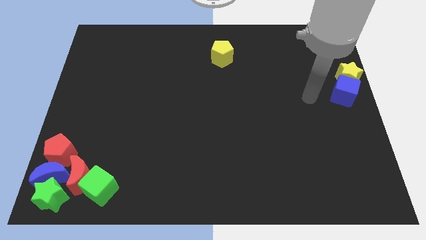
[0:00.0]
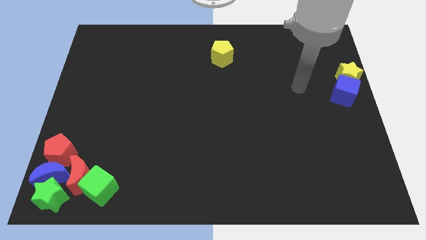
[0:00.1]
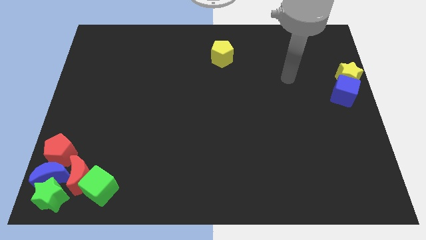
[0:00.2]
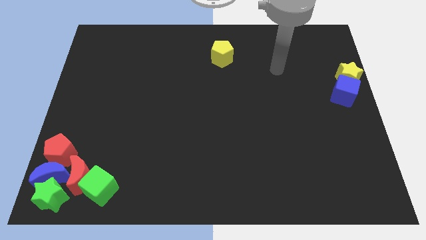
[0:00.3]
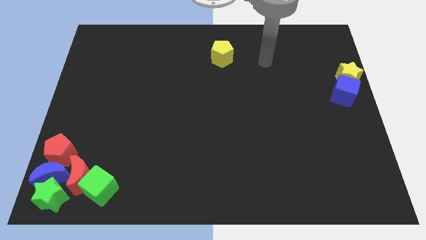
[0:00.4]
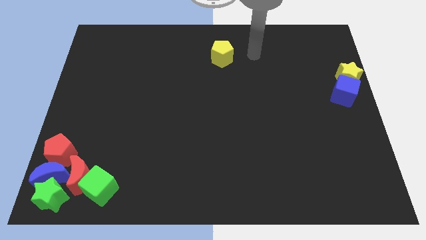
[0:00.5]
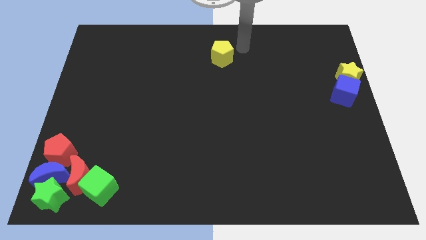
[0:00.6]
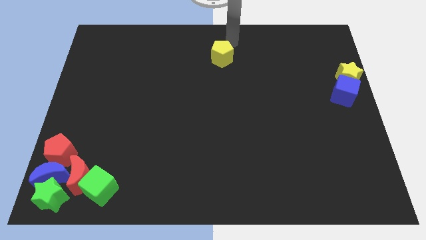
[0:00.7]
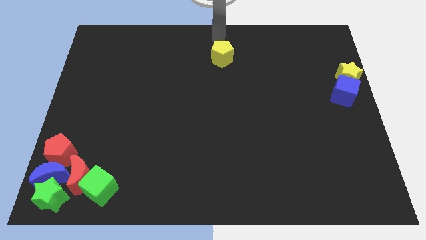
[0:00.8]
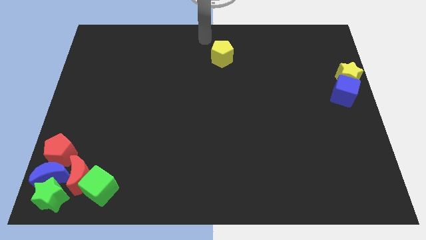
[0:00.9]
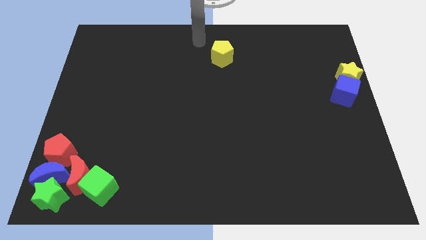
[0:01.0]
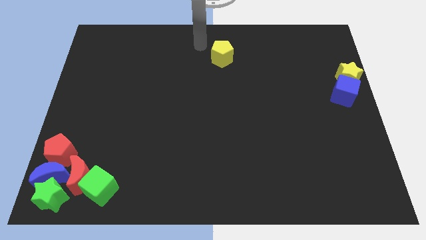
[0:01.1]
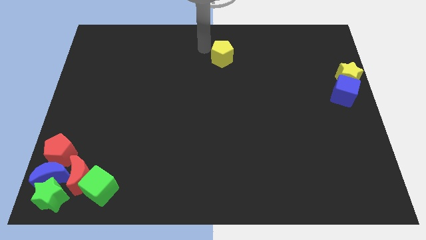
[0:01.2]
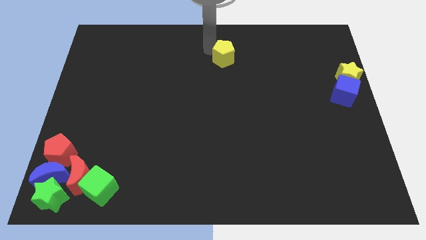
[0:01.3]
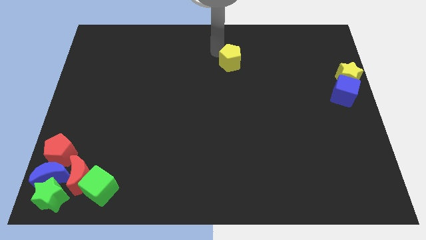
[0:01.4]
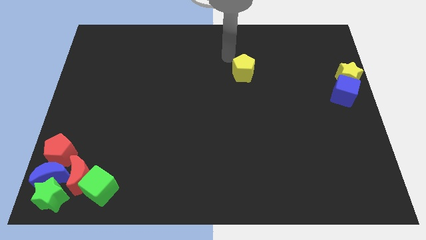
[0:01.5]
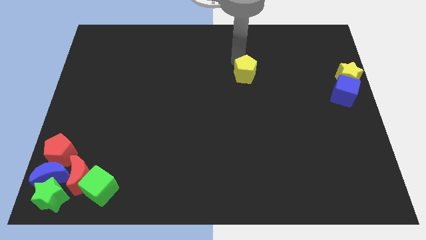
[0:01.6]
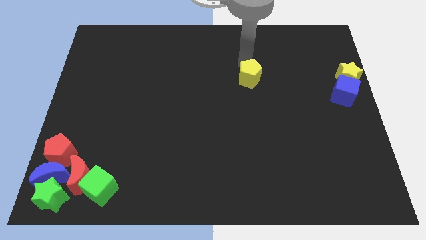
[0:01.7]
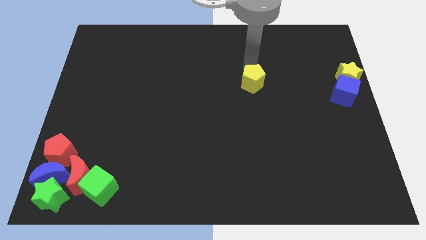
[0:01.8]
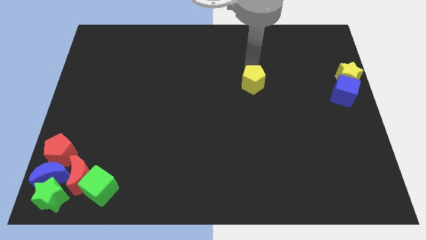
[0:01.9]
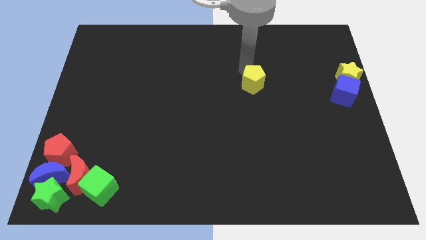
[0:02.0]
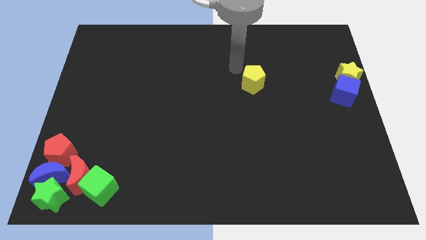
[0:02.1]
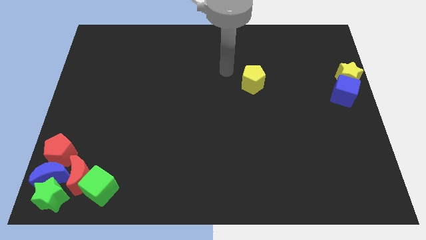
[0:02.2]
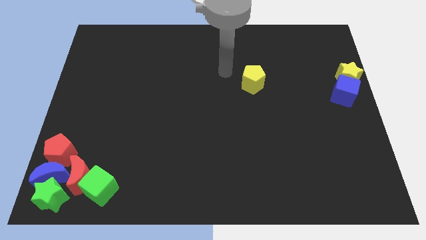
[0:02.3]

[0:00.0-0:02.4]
place the yellow pentagon to the left of the yellow star

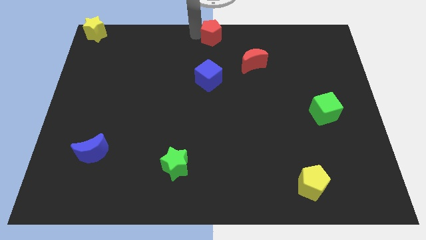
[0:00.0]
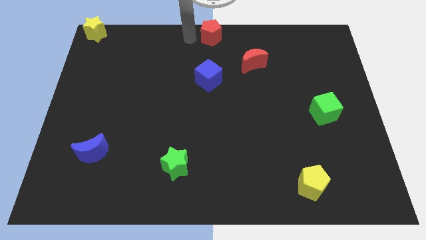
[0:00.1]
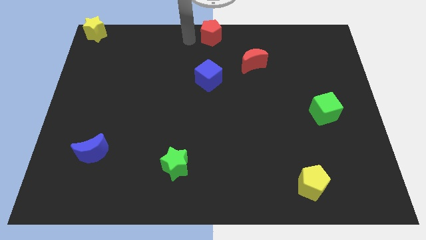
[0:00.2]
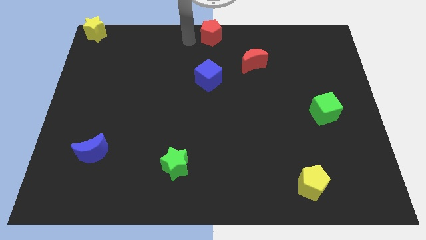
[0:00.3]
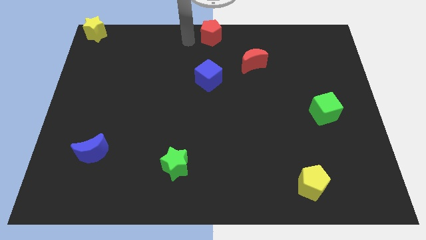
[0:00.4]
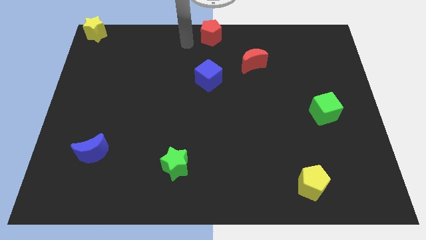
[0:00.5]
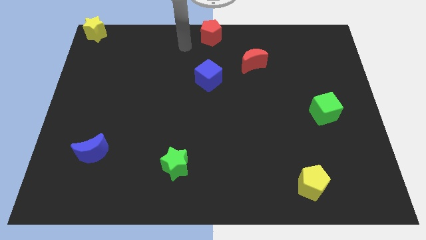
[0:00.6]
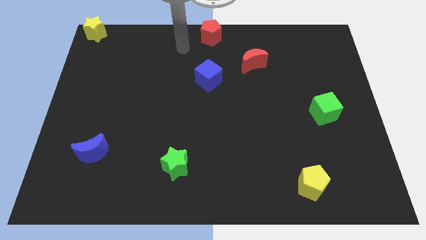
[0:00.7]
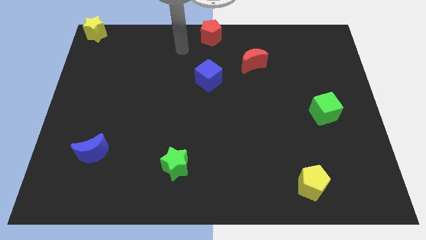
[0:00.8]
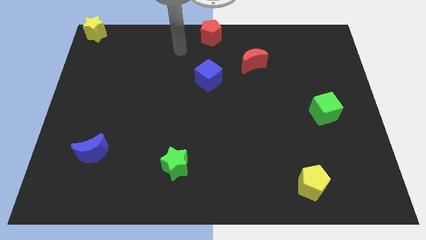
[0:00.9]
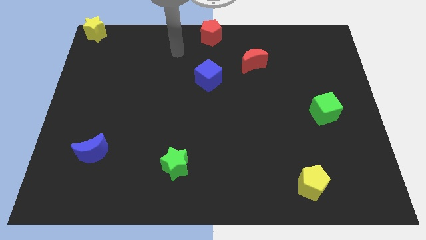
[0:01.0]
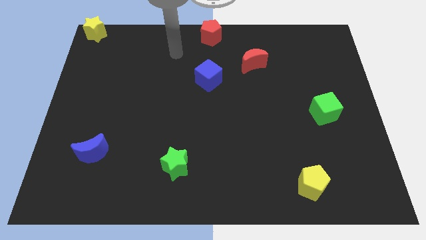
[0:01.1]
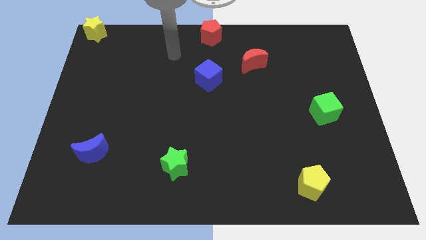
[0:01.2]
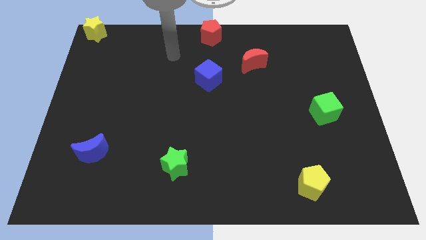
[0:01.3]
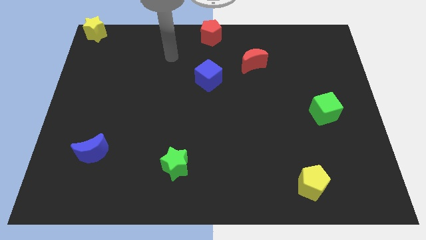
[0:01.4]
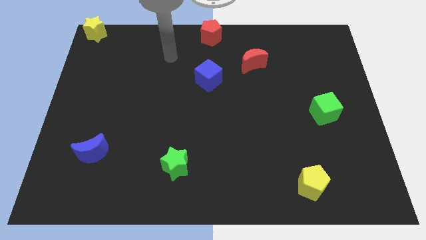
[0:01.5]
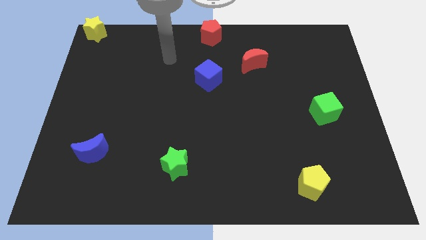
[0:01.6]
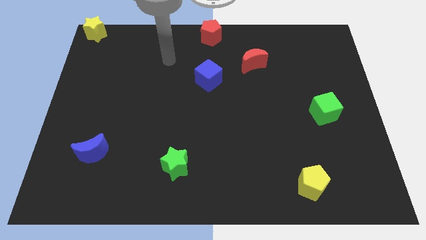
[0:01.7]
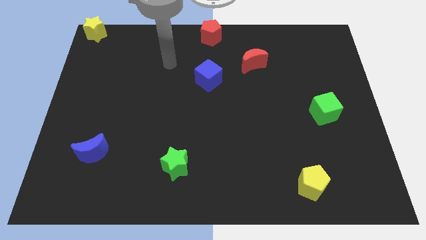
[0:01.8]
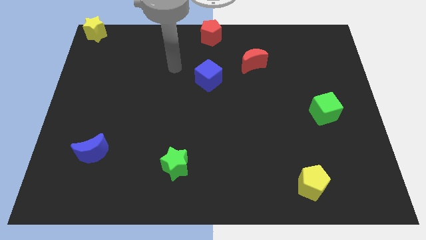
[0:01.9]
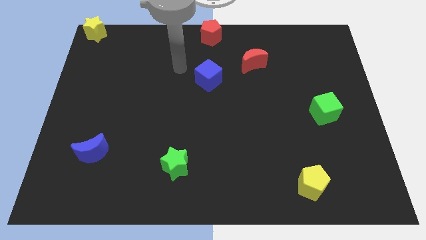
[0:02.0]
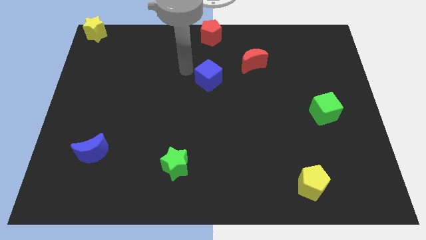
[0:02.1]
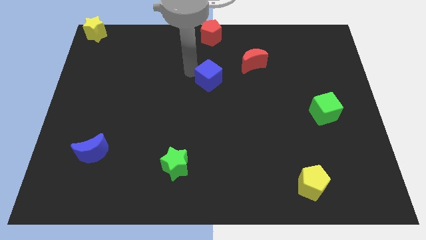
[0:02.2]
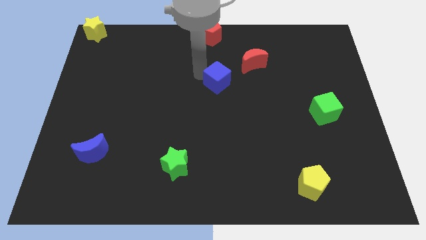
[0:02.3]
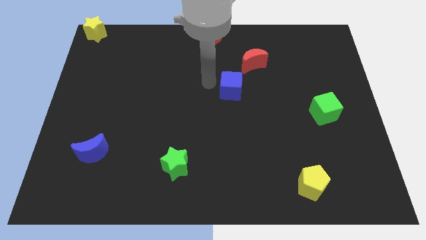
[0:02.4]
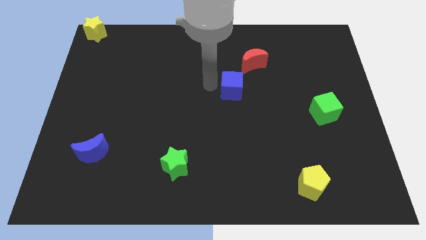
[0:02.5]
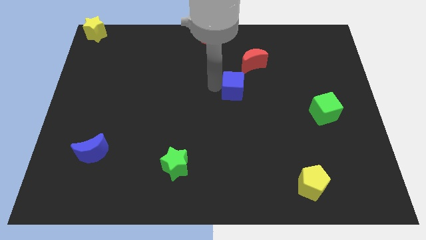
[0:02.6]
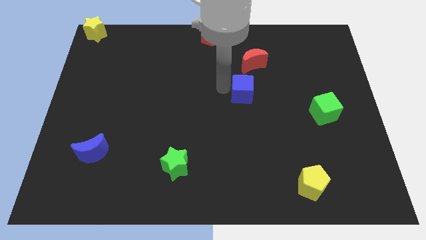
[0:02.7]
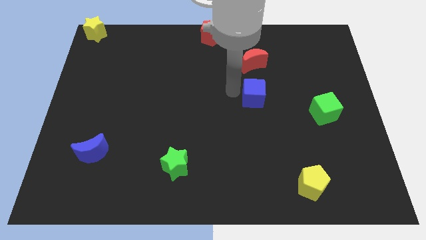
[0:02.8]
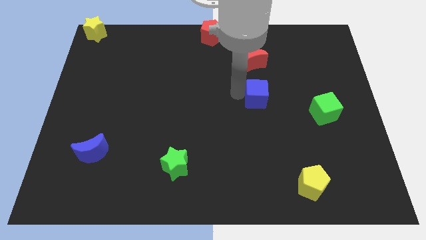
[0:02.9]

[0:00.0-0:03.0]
push the blue cube to the bottom side of the red moon

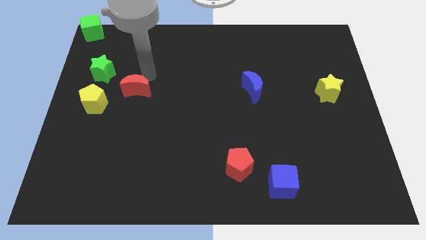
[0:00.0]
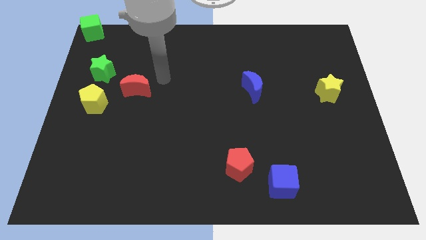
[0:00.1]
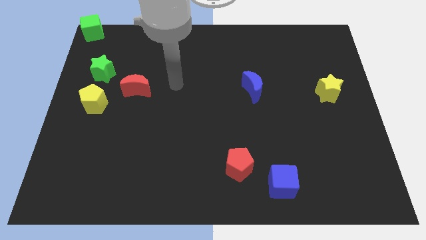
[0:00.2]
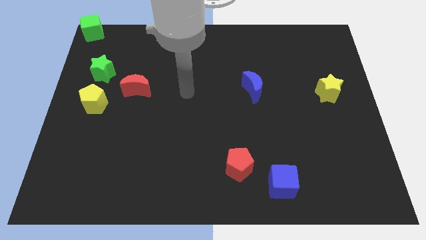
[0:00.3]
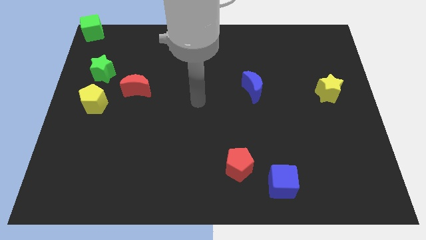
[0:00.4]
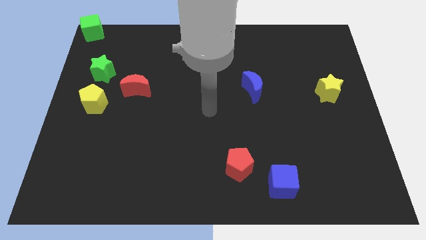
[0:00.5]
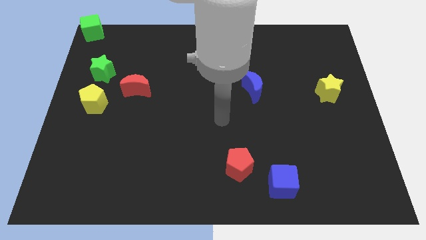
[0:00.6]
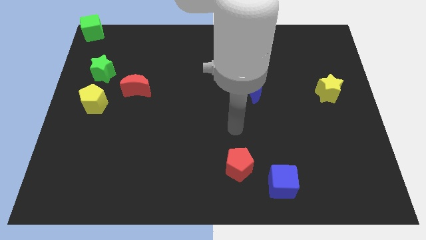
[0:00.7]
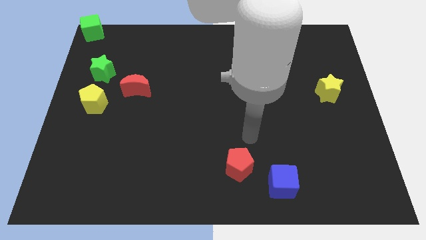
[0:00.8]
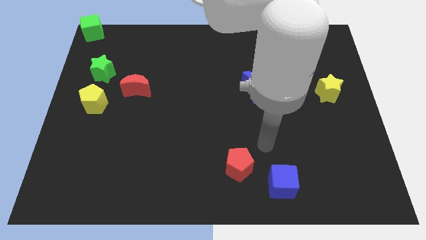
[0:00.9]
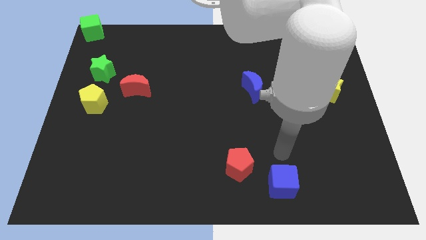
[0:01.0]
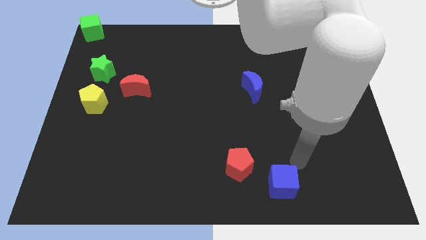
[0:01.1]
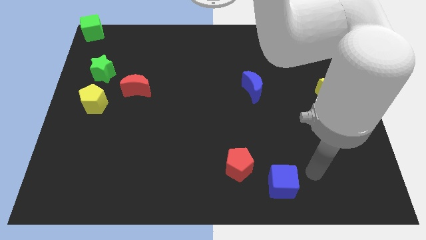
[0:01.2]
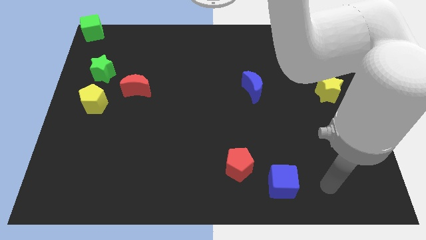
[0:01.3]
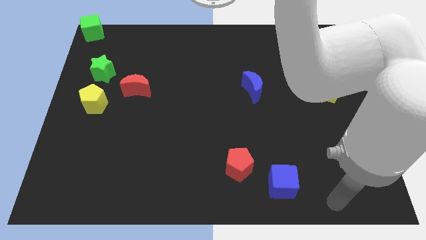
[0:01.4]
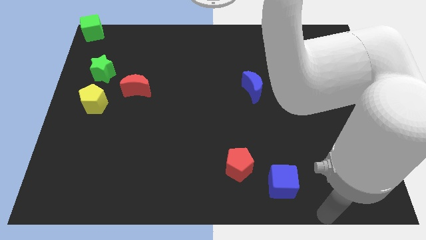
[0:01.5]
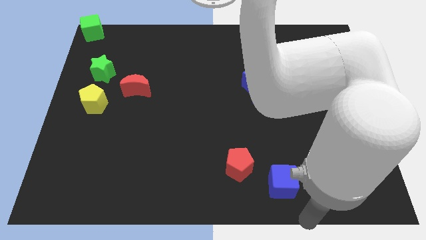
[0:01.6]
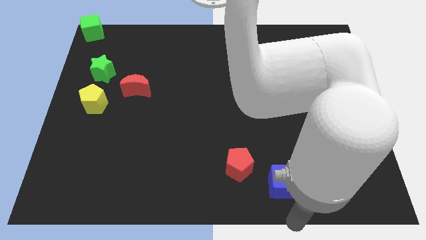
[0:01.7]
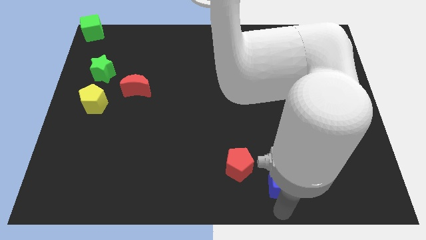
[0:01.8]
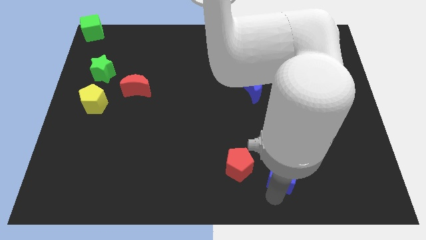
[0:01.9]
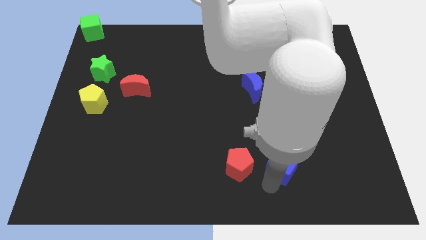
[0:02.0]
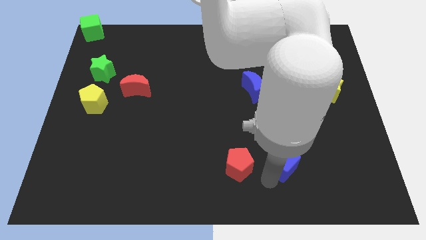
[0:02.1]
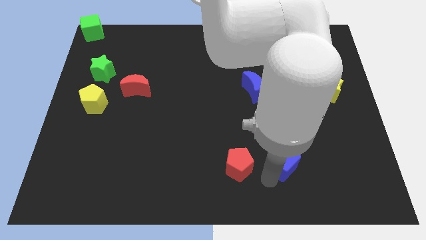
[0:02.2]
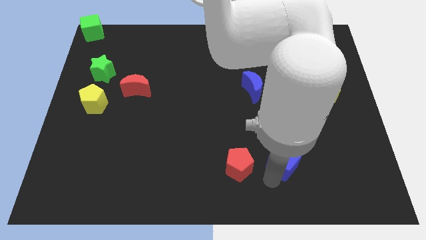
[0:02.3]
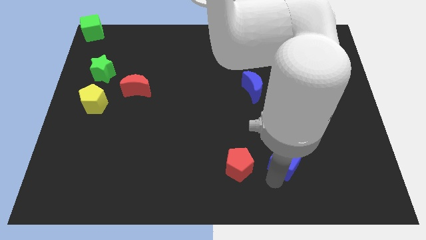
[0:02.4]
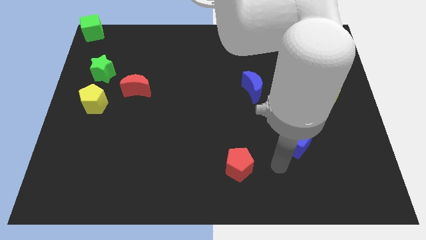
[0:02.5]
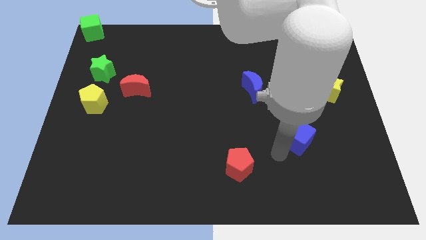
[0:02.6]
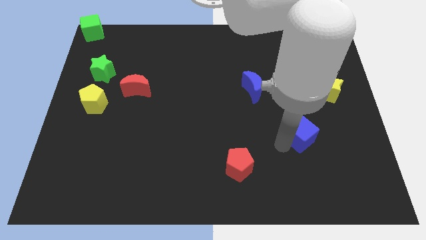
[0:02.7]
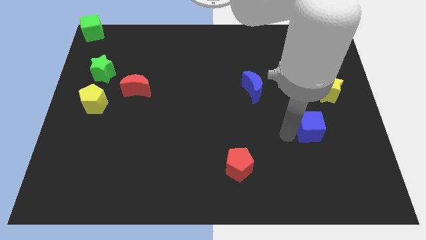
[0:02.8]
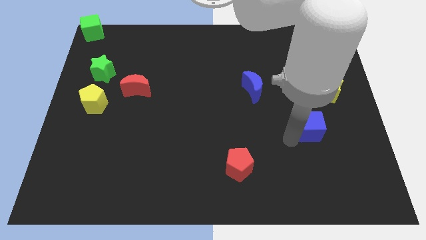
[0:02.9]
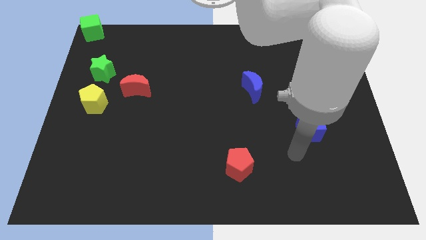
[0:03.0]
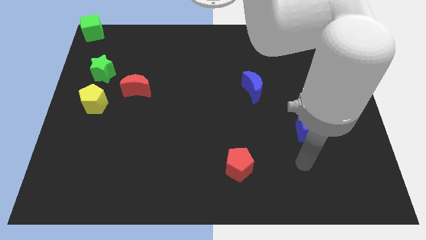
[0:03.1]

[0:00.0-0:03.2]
move the blue cube towards yellow star

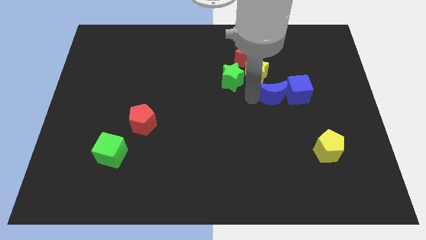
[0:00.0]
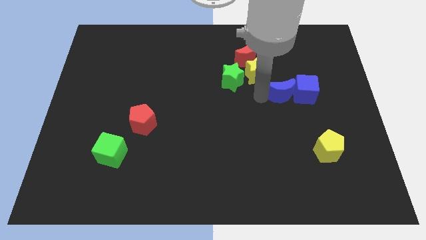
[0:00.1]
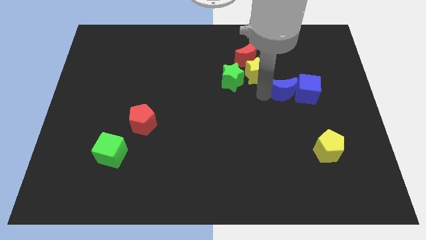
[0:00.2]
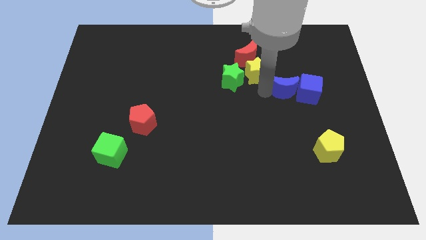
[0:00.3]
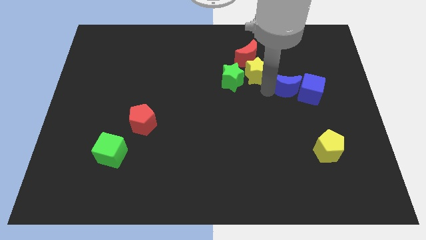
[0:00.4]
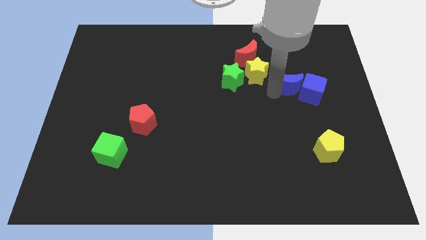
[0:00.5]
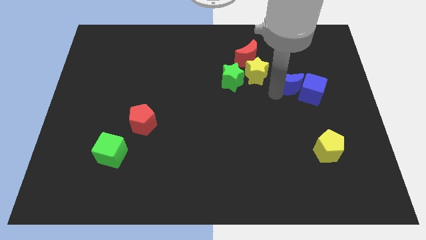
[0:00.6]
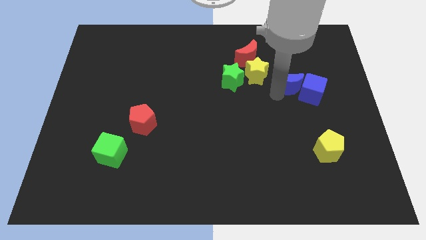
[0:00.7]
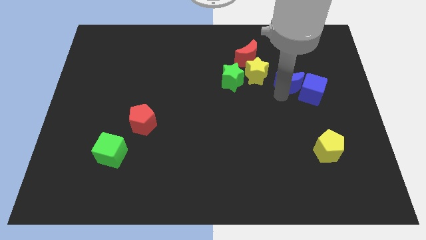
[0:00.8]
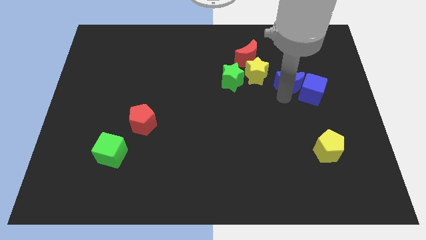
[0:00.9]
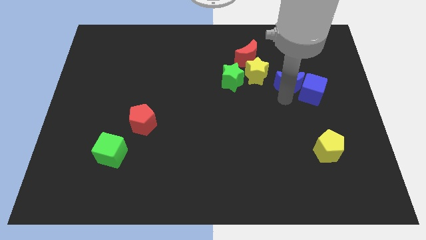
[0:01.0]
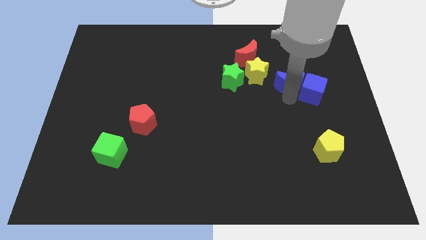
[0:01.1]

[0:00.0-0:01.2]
push the blue blocks towards the right side of the board
